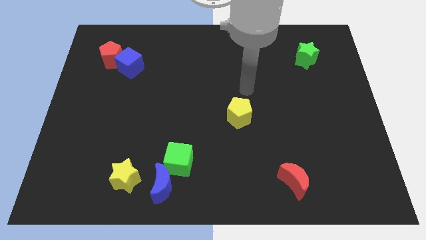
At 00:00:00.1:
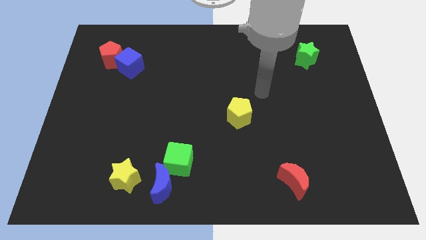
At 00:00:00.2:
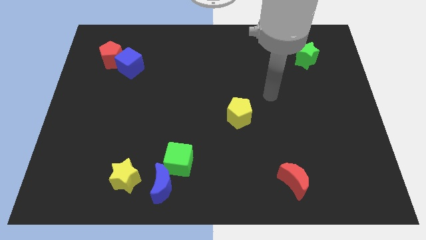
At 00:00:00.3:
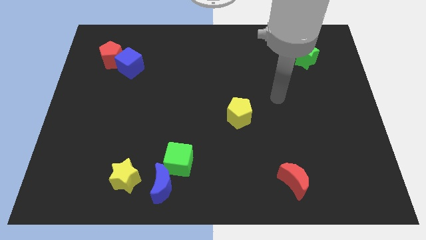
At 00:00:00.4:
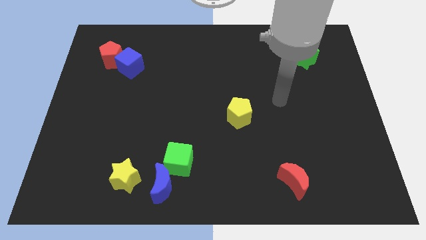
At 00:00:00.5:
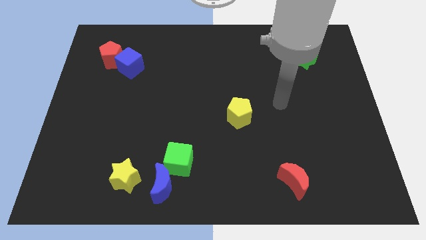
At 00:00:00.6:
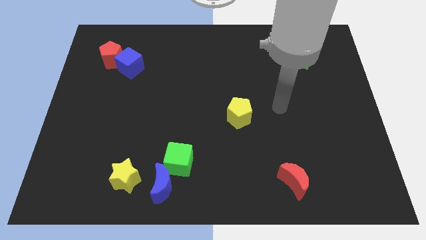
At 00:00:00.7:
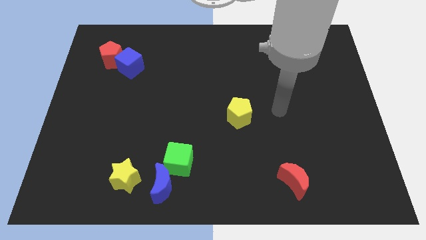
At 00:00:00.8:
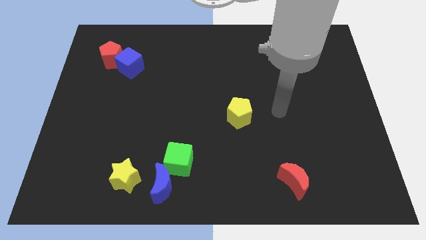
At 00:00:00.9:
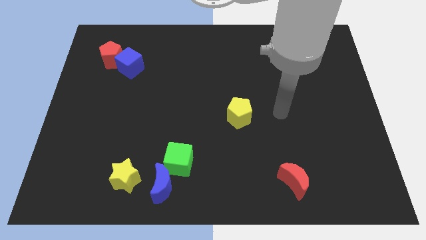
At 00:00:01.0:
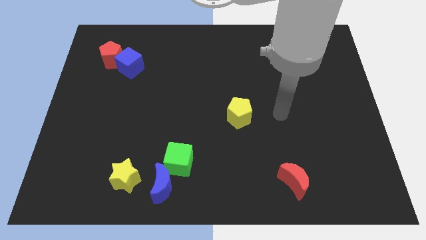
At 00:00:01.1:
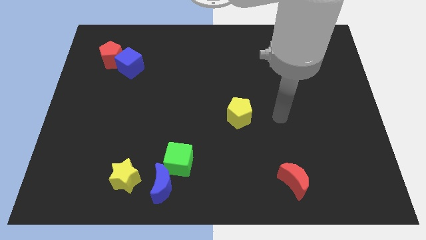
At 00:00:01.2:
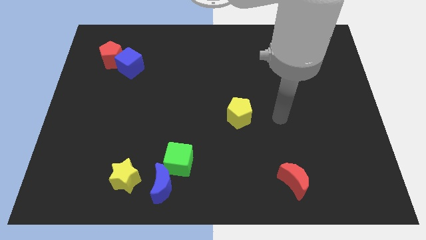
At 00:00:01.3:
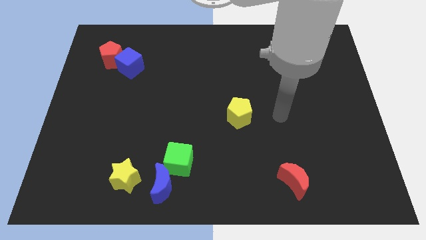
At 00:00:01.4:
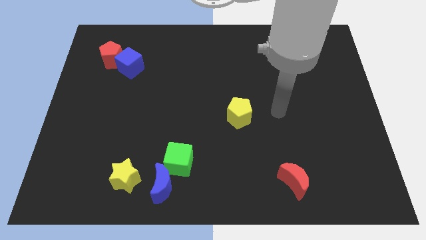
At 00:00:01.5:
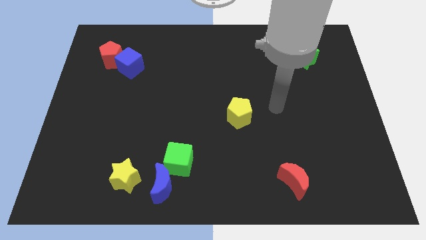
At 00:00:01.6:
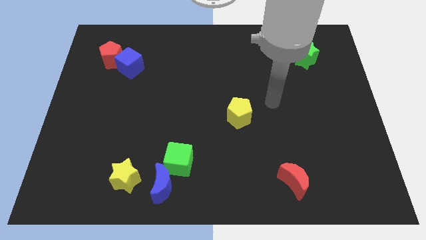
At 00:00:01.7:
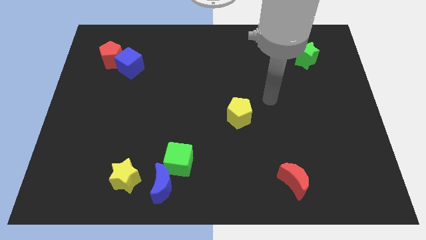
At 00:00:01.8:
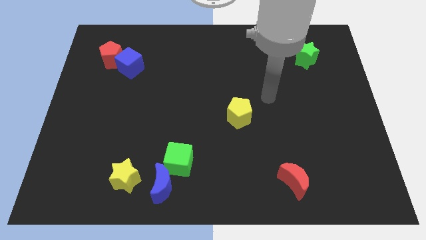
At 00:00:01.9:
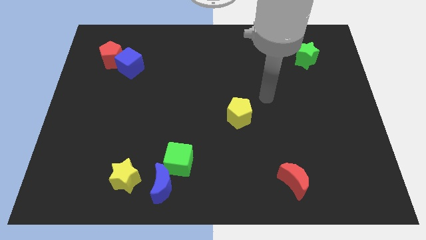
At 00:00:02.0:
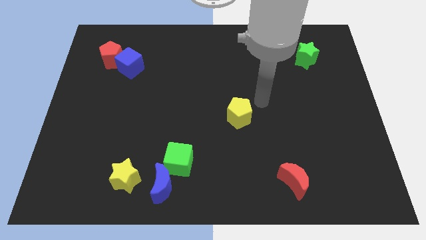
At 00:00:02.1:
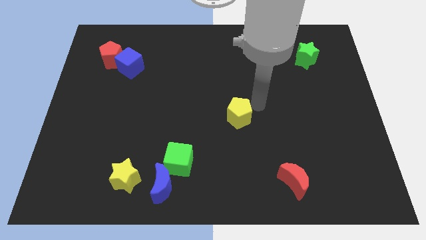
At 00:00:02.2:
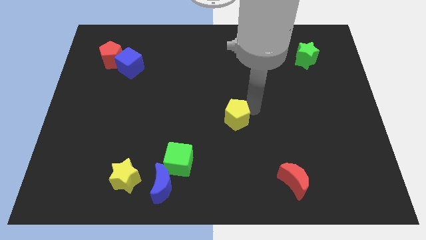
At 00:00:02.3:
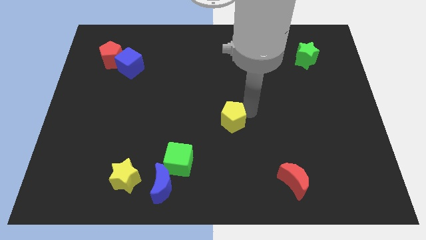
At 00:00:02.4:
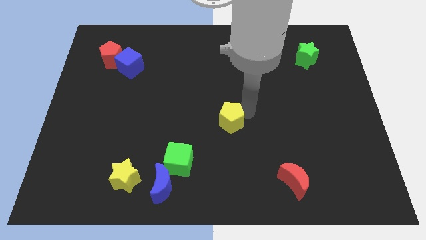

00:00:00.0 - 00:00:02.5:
slightly push the yellow pentagon towards the green cube

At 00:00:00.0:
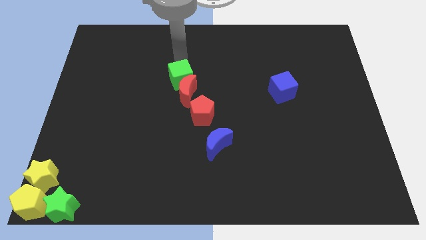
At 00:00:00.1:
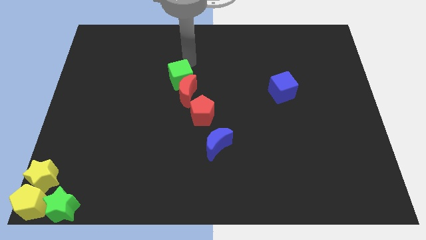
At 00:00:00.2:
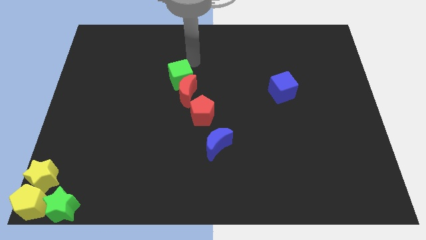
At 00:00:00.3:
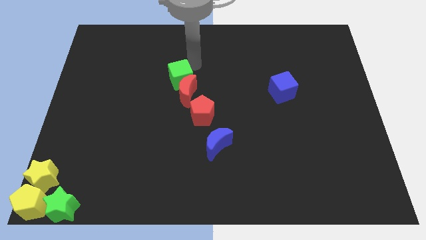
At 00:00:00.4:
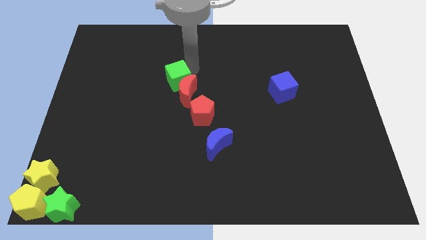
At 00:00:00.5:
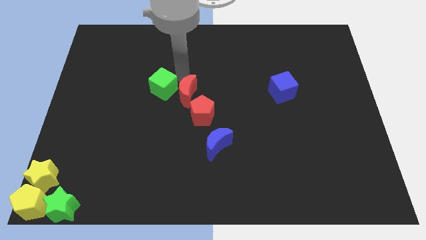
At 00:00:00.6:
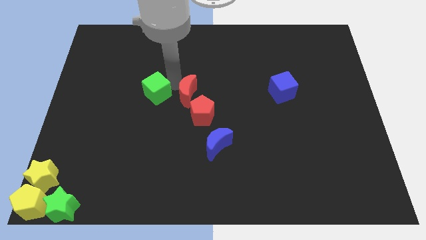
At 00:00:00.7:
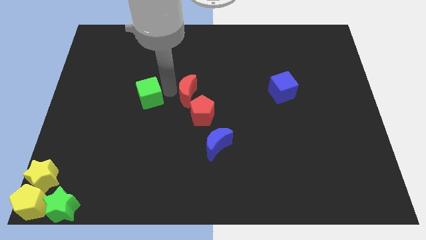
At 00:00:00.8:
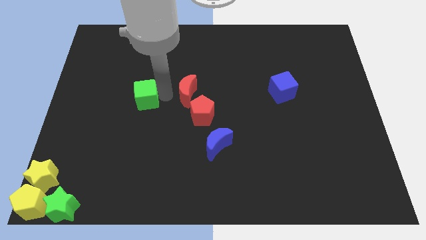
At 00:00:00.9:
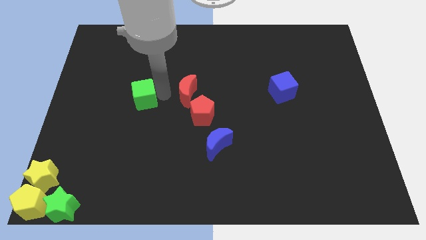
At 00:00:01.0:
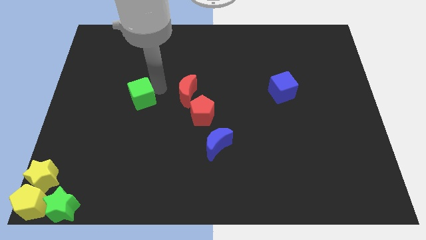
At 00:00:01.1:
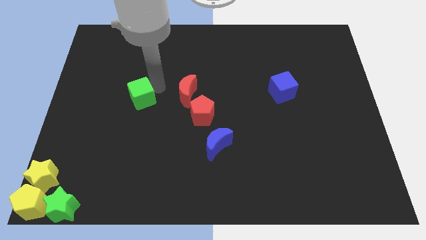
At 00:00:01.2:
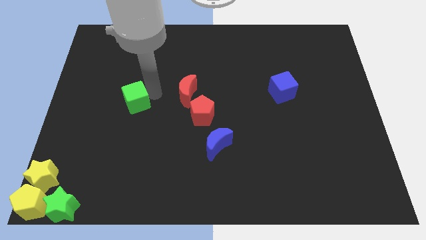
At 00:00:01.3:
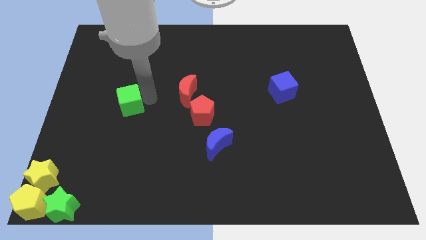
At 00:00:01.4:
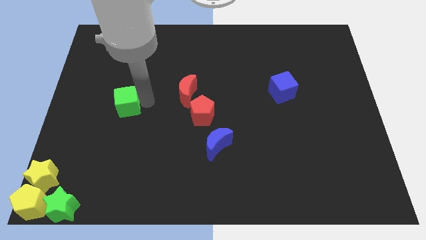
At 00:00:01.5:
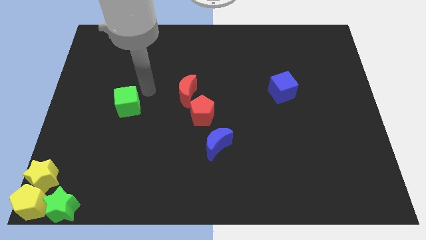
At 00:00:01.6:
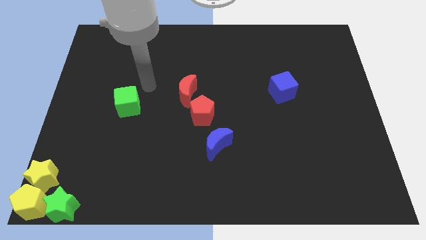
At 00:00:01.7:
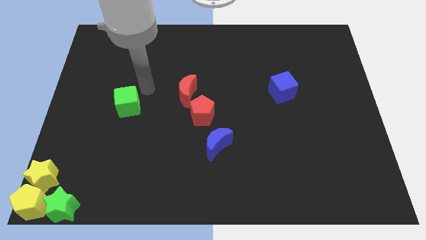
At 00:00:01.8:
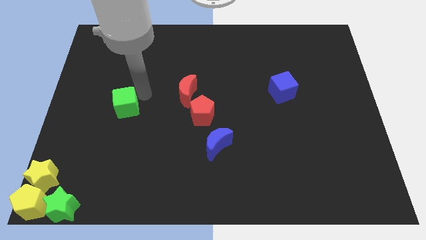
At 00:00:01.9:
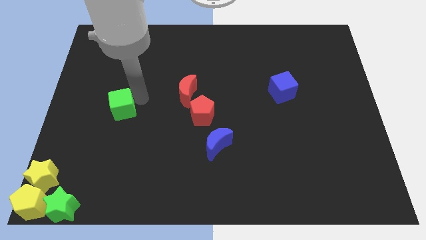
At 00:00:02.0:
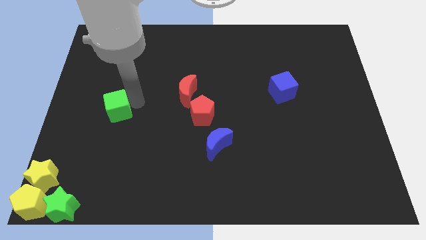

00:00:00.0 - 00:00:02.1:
drag the green cube towards the left center of the board

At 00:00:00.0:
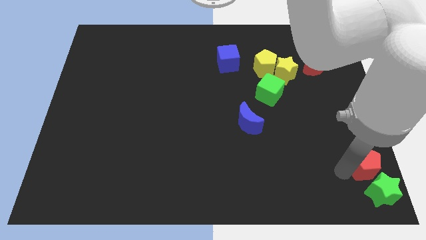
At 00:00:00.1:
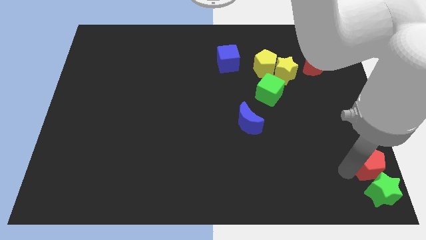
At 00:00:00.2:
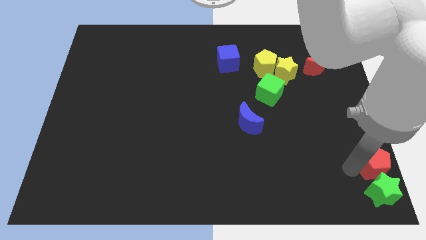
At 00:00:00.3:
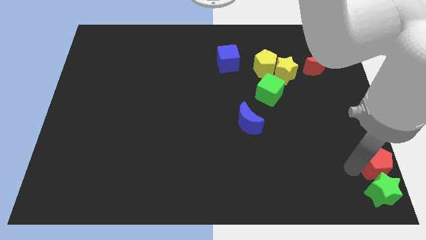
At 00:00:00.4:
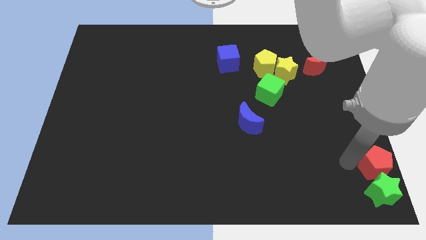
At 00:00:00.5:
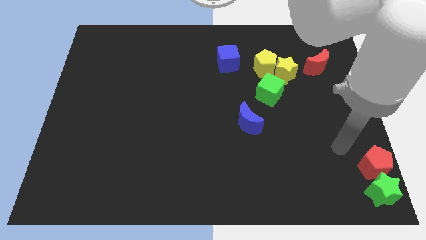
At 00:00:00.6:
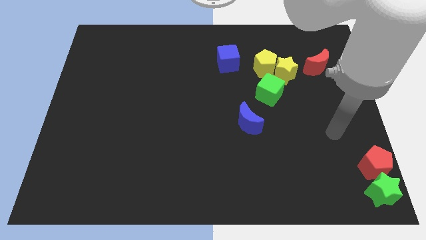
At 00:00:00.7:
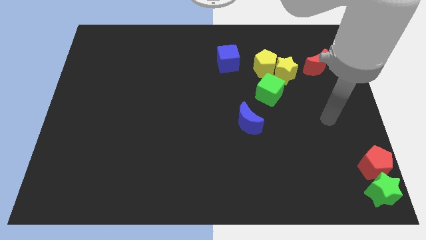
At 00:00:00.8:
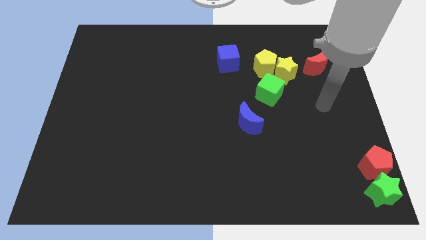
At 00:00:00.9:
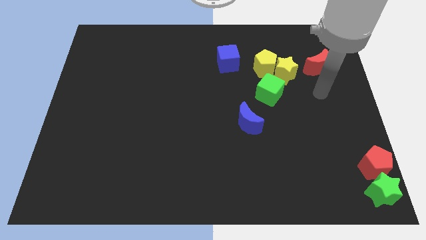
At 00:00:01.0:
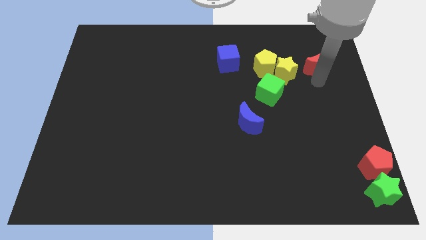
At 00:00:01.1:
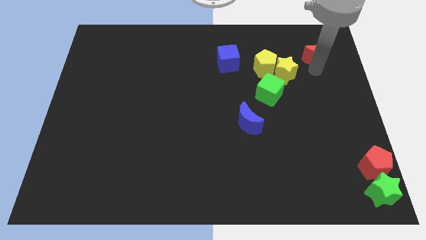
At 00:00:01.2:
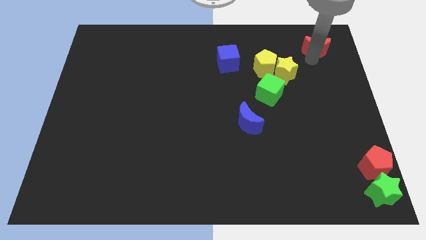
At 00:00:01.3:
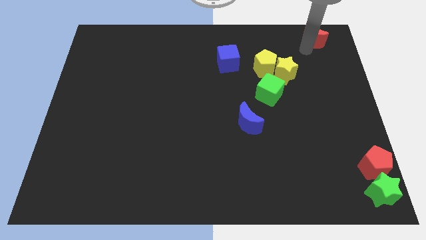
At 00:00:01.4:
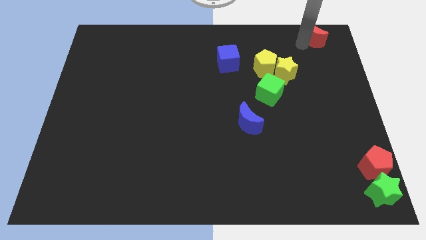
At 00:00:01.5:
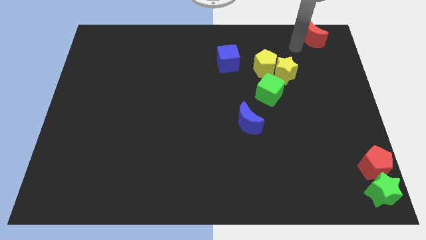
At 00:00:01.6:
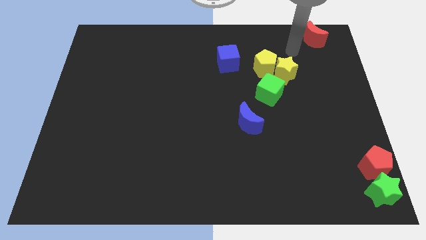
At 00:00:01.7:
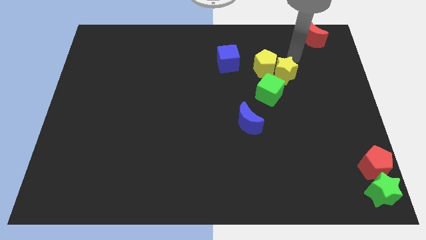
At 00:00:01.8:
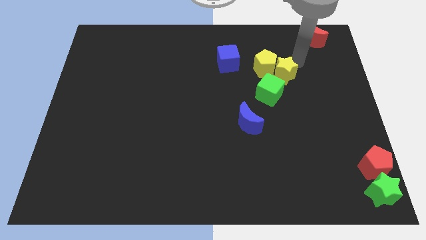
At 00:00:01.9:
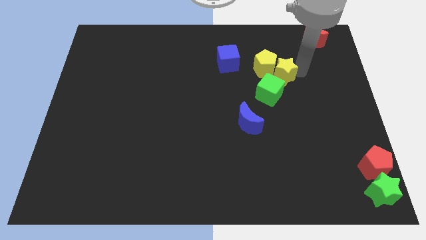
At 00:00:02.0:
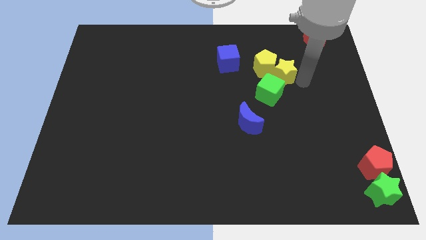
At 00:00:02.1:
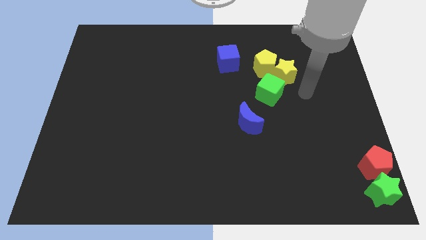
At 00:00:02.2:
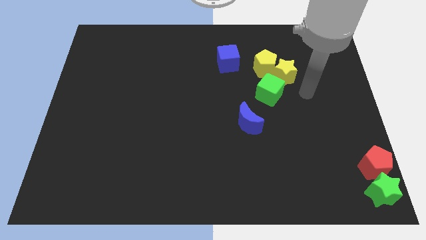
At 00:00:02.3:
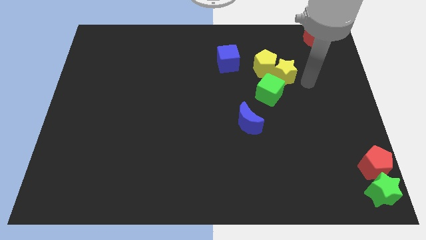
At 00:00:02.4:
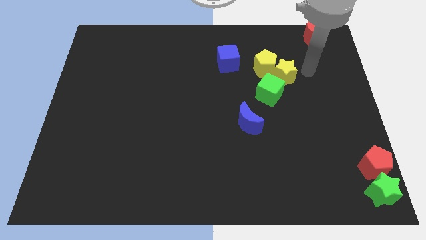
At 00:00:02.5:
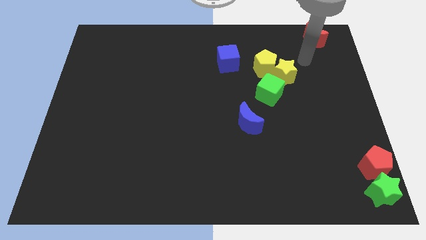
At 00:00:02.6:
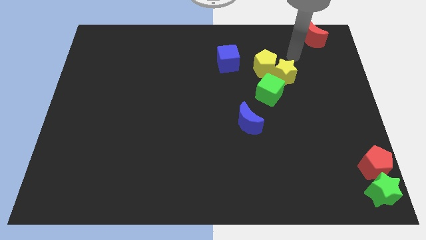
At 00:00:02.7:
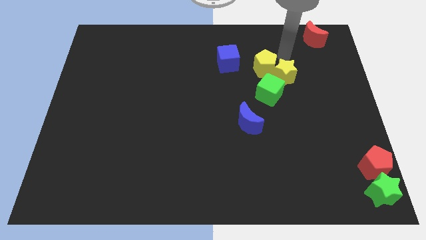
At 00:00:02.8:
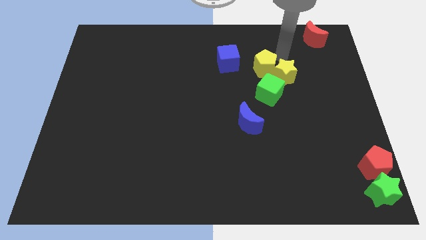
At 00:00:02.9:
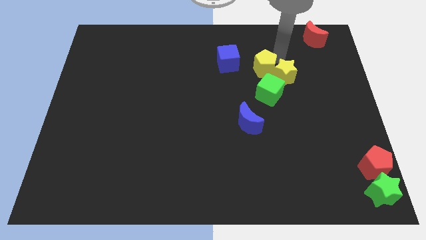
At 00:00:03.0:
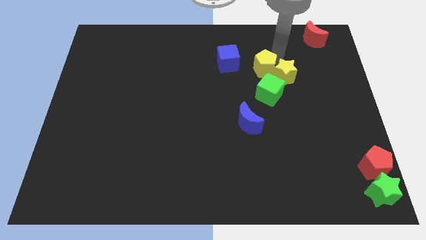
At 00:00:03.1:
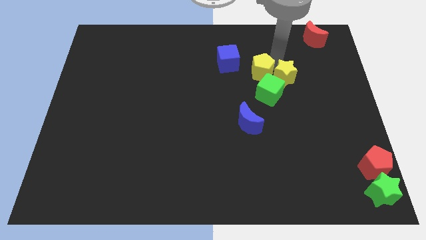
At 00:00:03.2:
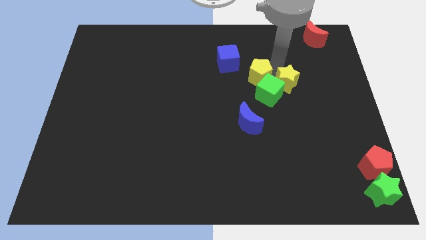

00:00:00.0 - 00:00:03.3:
push the red crescent to the top right corner

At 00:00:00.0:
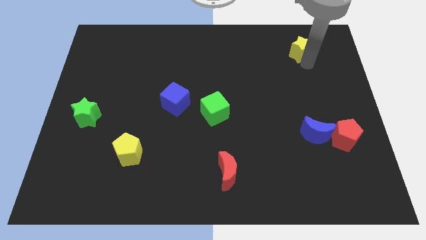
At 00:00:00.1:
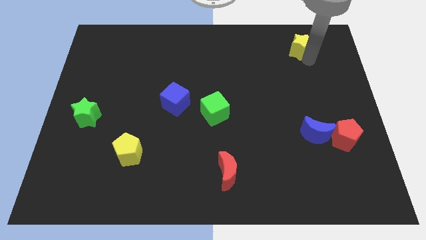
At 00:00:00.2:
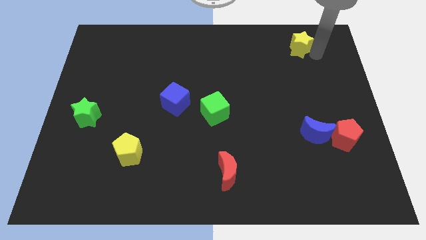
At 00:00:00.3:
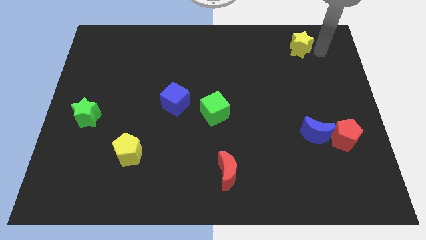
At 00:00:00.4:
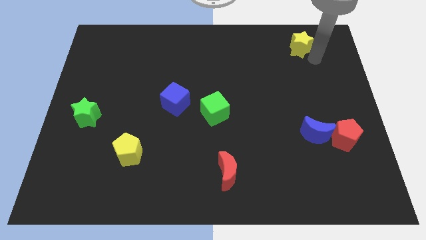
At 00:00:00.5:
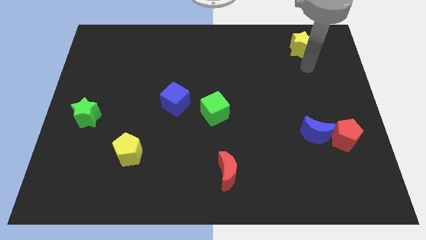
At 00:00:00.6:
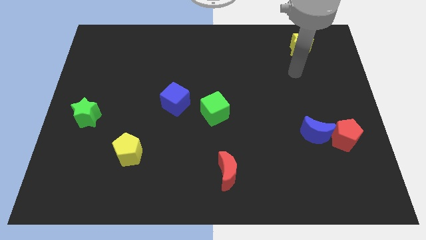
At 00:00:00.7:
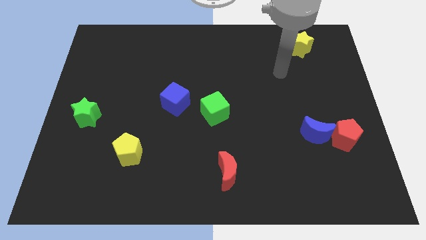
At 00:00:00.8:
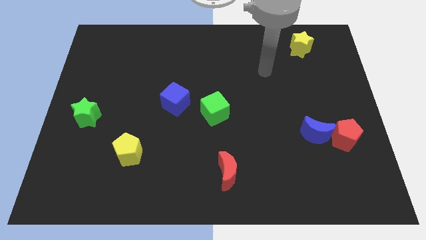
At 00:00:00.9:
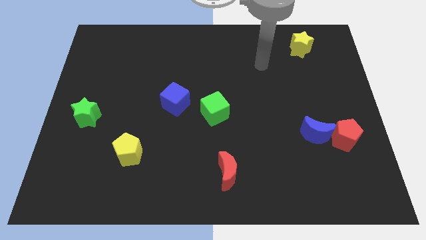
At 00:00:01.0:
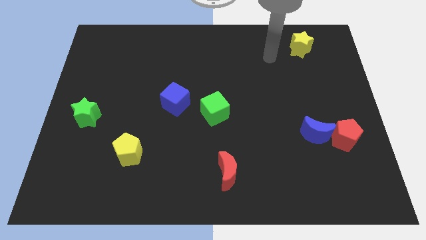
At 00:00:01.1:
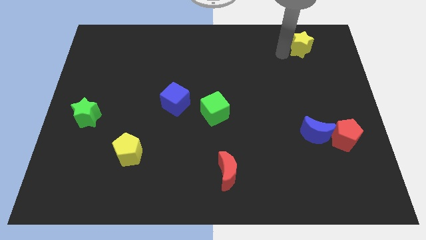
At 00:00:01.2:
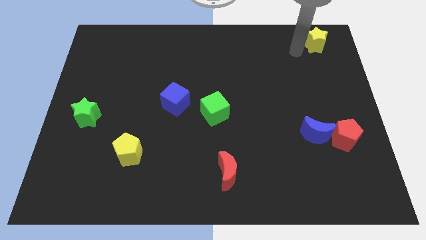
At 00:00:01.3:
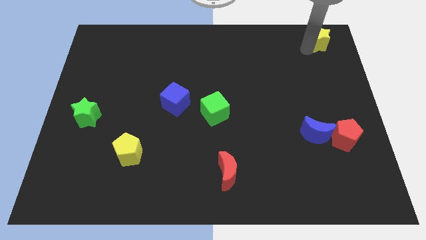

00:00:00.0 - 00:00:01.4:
put the yellow star vertically above the blue crescent
